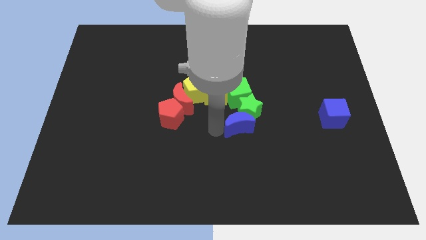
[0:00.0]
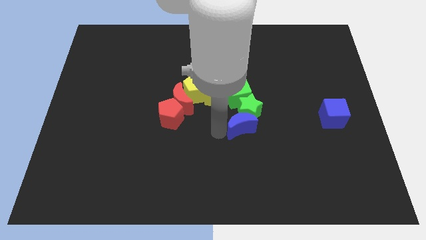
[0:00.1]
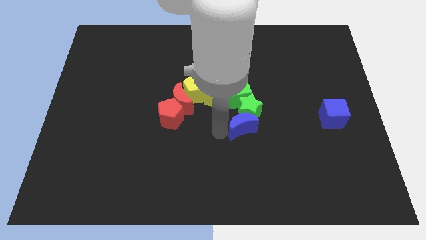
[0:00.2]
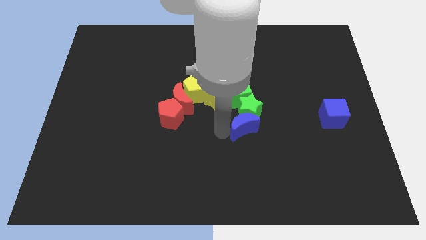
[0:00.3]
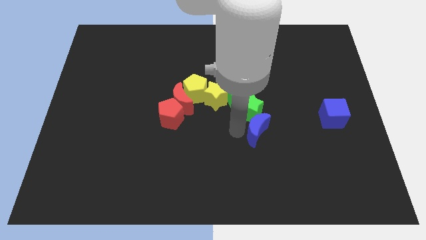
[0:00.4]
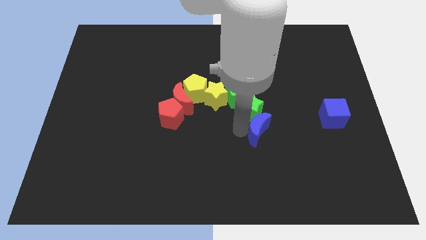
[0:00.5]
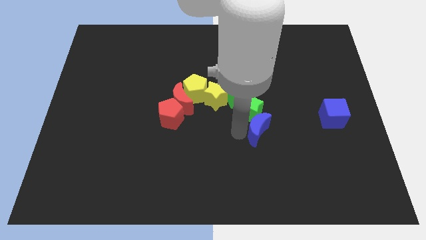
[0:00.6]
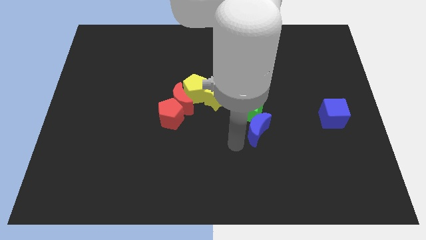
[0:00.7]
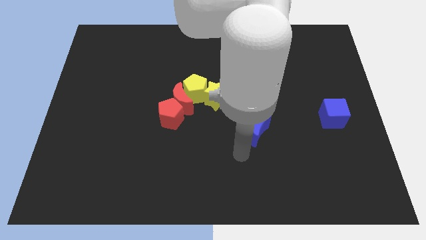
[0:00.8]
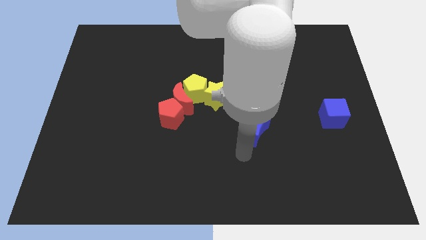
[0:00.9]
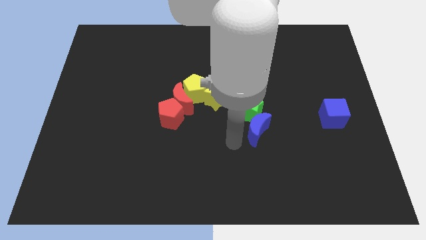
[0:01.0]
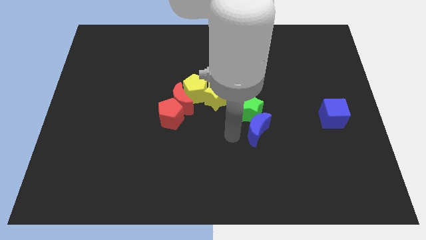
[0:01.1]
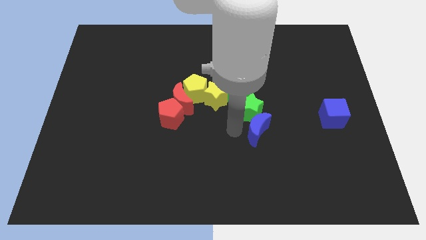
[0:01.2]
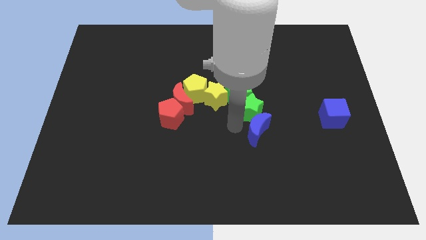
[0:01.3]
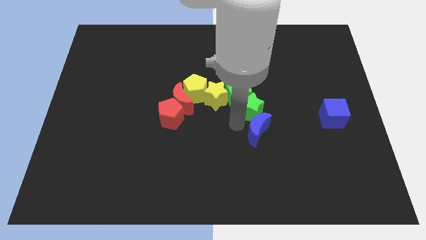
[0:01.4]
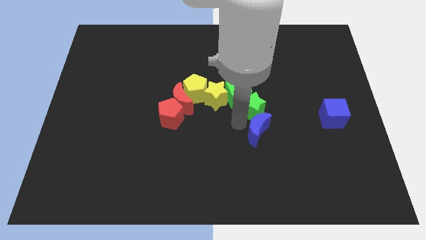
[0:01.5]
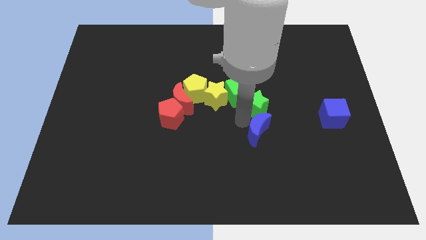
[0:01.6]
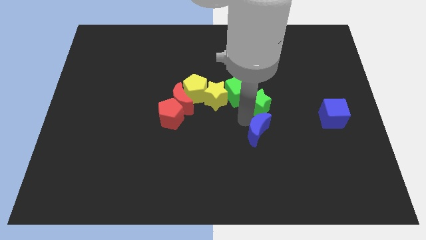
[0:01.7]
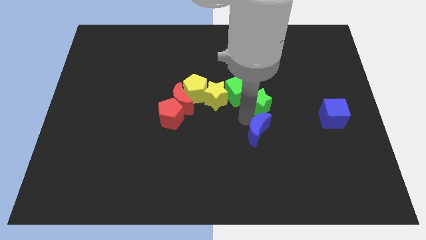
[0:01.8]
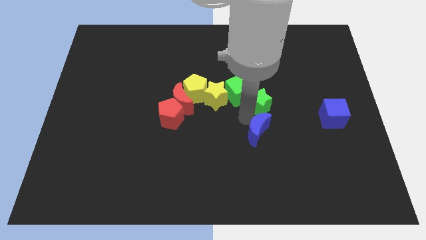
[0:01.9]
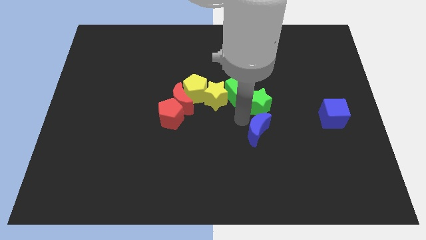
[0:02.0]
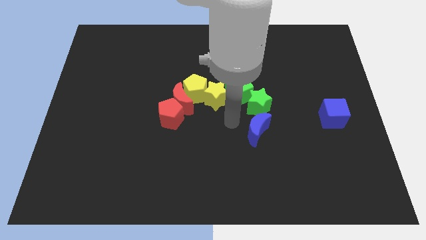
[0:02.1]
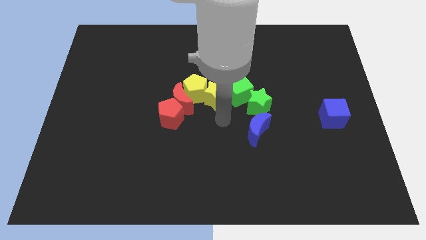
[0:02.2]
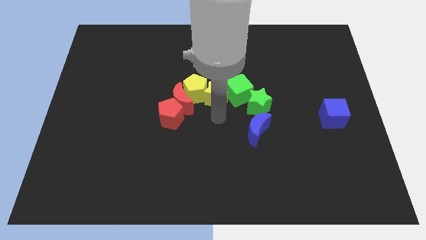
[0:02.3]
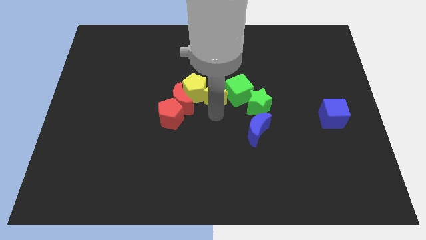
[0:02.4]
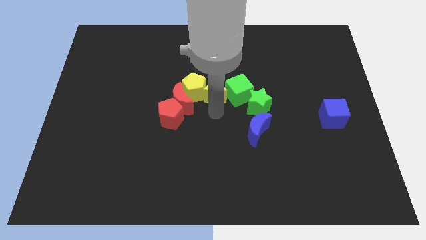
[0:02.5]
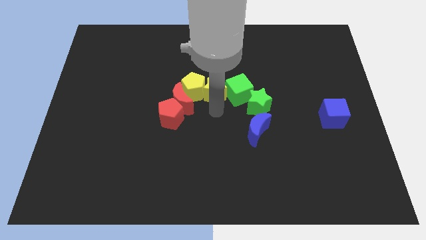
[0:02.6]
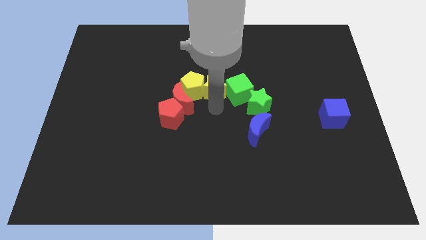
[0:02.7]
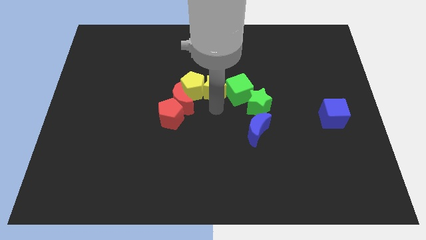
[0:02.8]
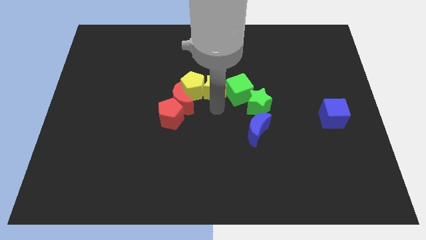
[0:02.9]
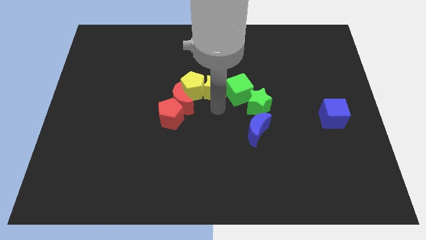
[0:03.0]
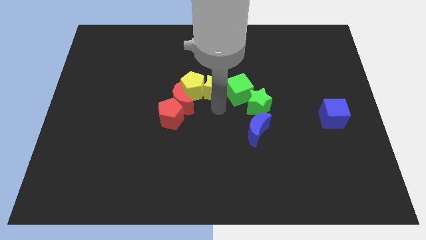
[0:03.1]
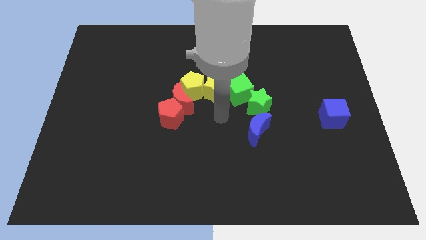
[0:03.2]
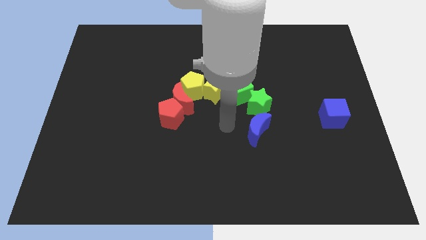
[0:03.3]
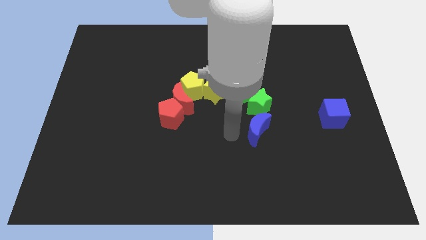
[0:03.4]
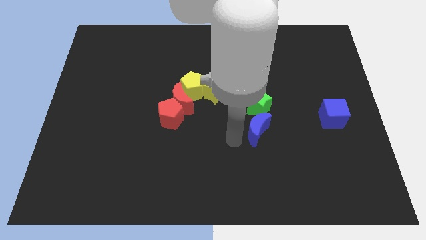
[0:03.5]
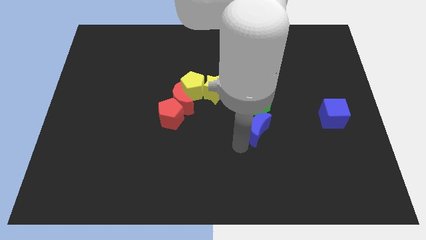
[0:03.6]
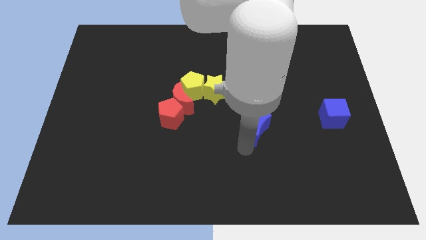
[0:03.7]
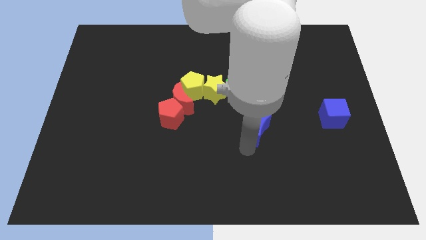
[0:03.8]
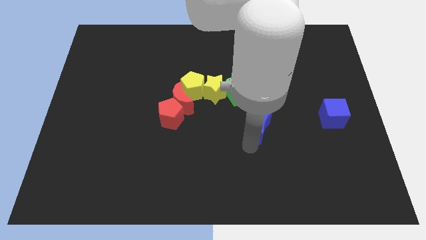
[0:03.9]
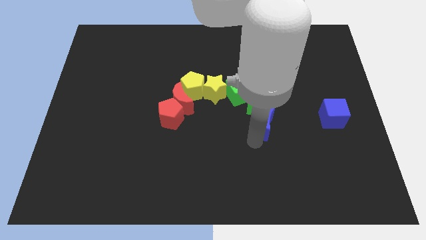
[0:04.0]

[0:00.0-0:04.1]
place your arm below the blue crescent

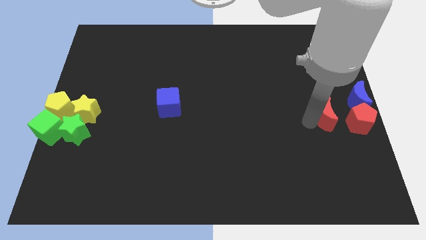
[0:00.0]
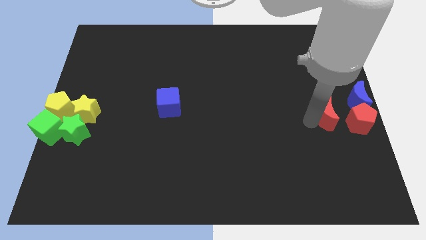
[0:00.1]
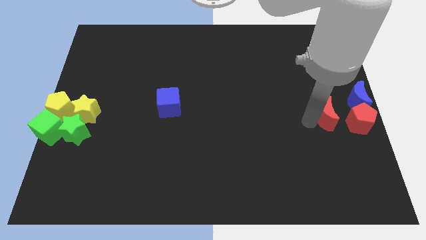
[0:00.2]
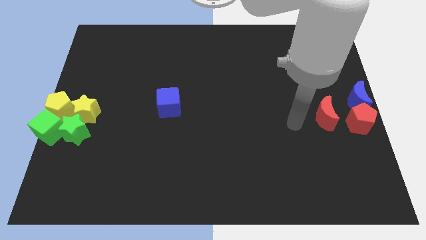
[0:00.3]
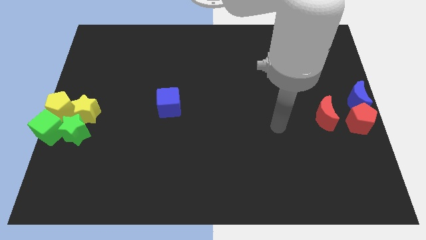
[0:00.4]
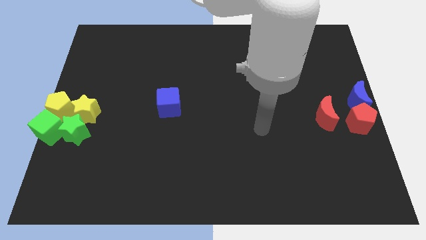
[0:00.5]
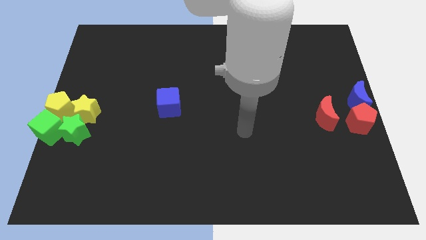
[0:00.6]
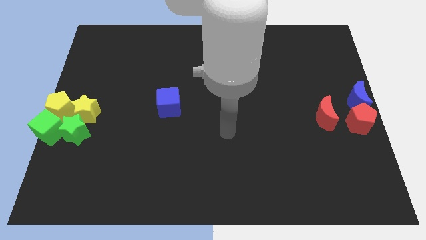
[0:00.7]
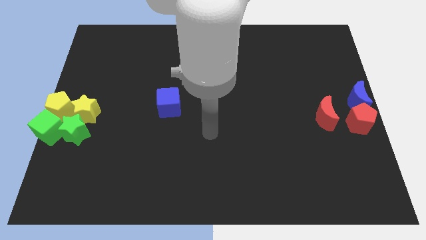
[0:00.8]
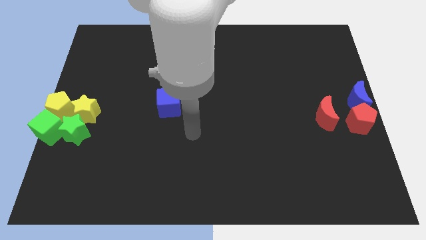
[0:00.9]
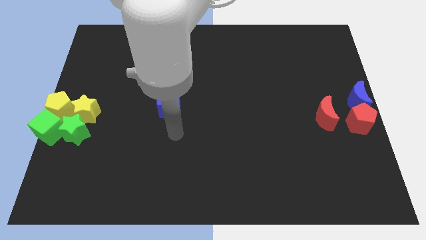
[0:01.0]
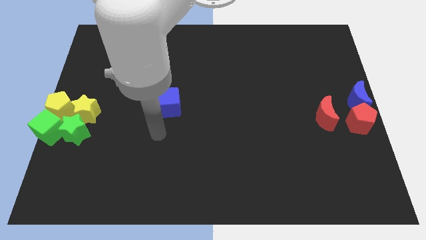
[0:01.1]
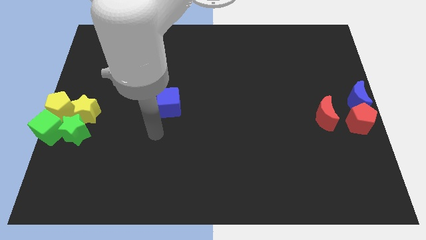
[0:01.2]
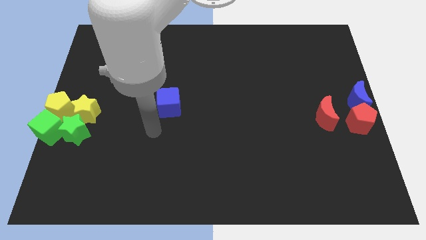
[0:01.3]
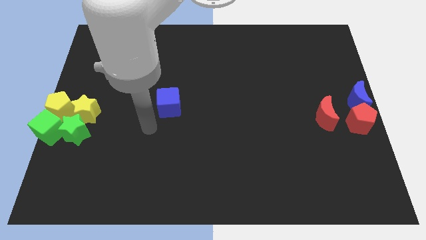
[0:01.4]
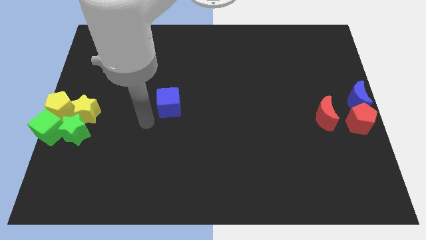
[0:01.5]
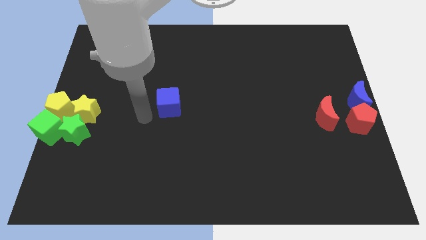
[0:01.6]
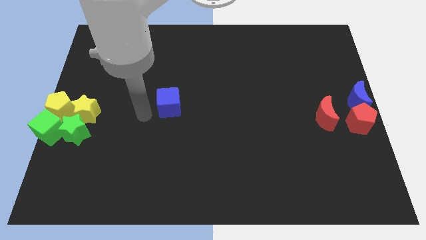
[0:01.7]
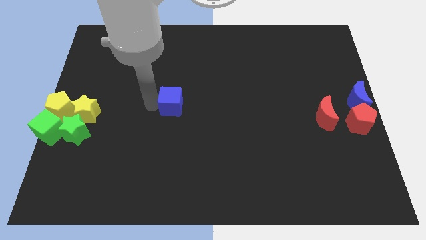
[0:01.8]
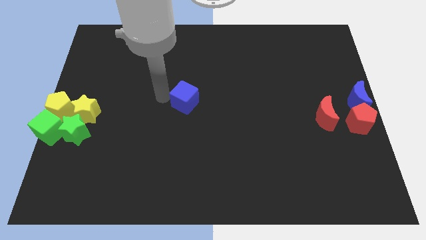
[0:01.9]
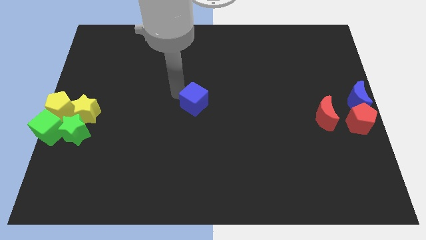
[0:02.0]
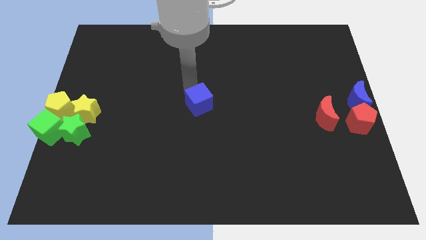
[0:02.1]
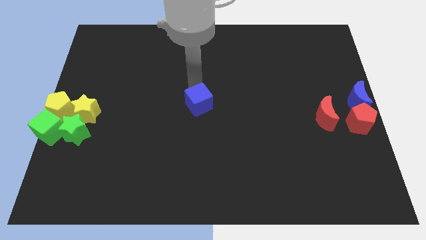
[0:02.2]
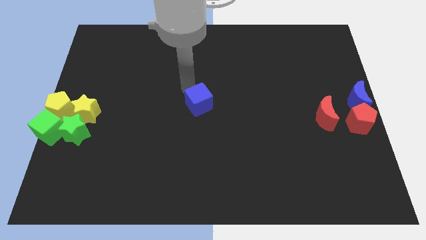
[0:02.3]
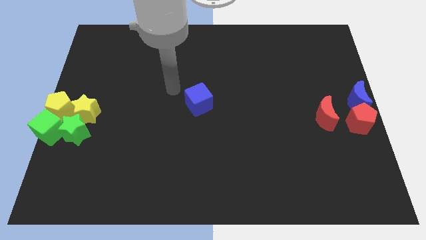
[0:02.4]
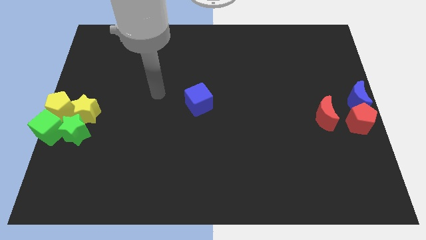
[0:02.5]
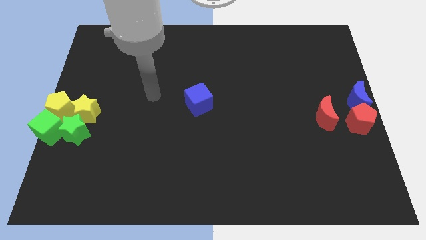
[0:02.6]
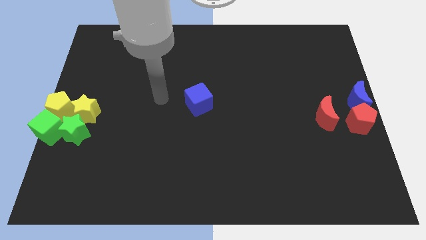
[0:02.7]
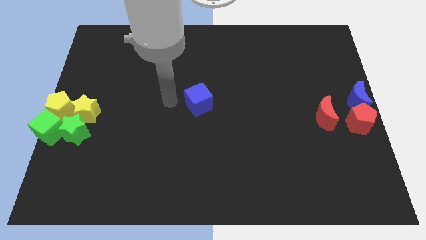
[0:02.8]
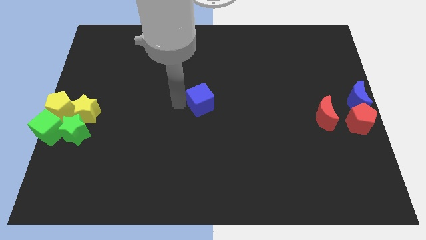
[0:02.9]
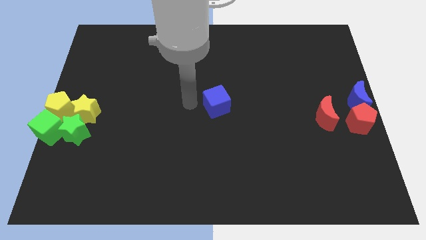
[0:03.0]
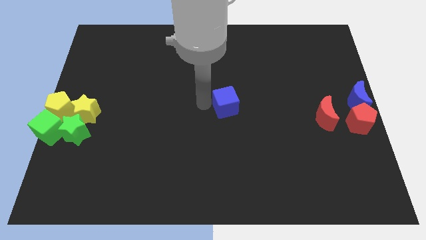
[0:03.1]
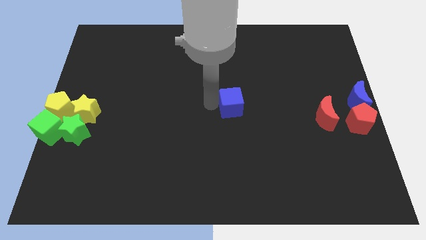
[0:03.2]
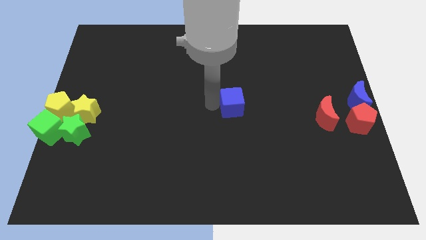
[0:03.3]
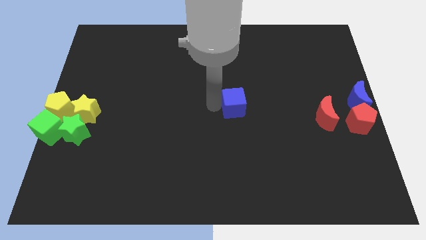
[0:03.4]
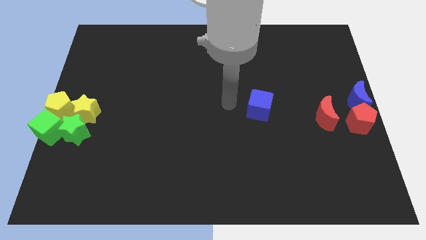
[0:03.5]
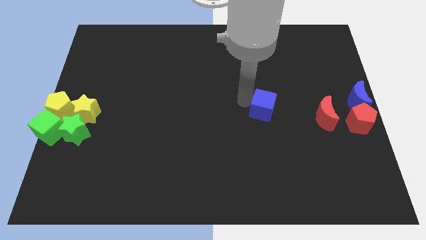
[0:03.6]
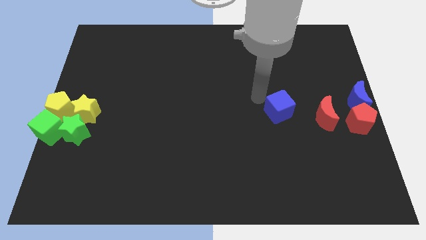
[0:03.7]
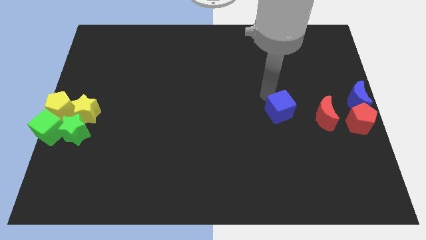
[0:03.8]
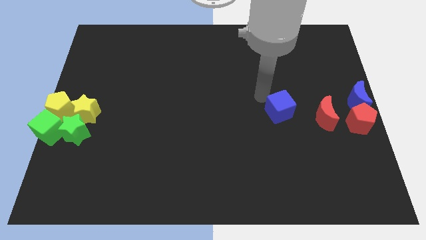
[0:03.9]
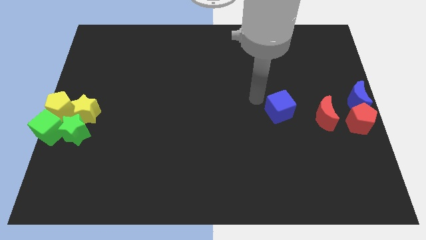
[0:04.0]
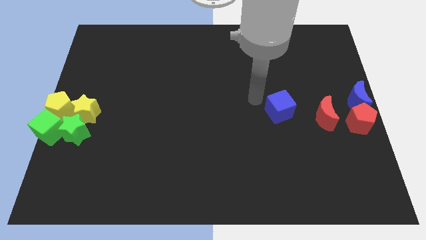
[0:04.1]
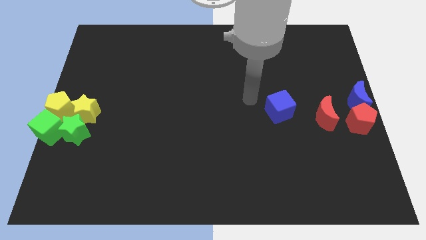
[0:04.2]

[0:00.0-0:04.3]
place the blue cube to the left side of red crescent

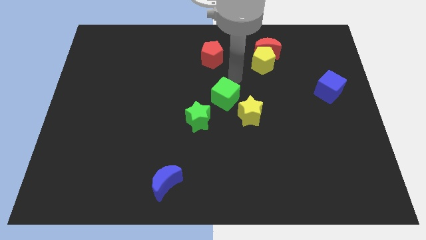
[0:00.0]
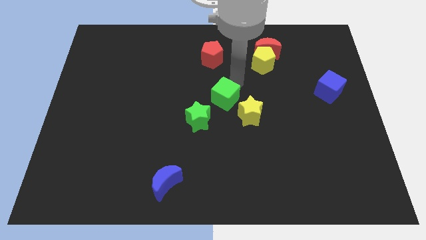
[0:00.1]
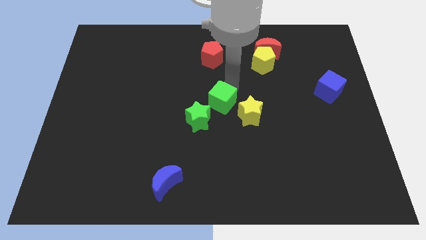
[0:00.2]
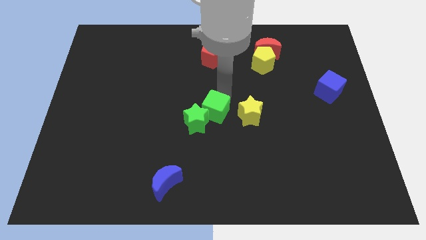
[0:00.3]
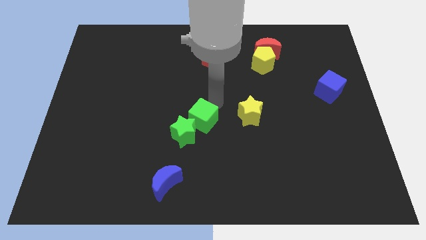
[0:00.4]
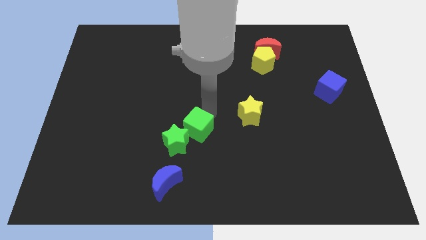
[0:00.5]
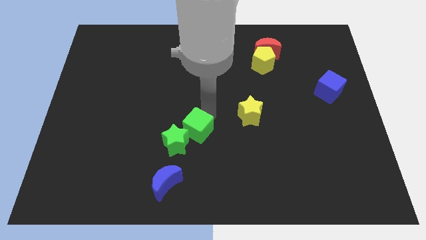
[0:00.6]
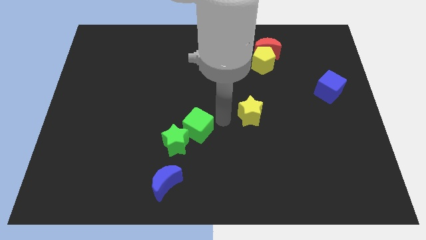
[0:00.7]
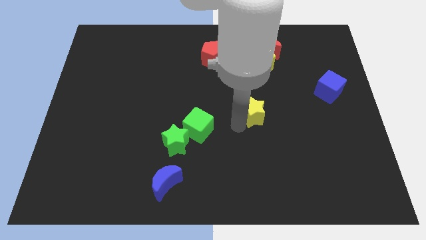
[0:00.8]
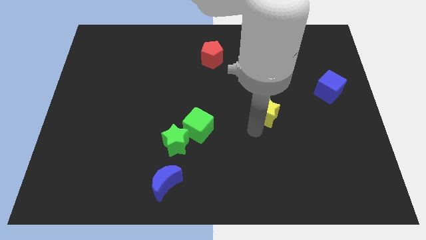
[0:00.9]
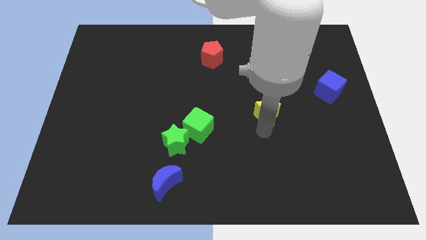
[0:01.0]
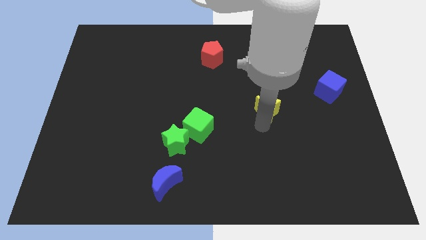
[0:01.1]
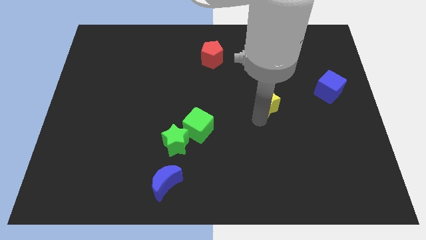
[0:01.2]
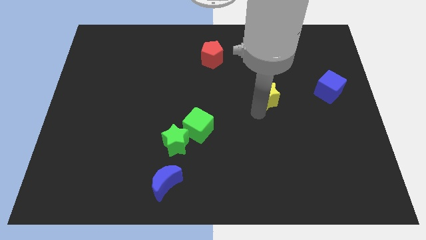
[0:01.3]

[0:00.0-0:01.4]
push yellow star below yellow pentagon
